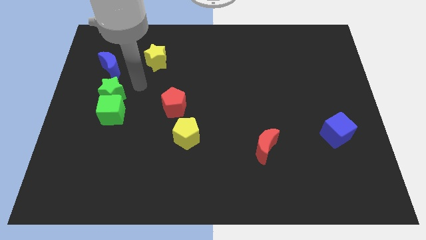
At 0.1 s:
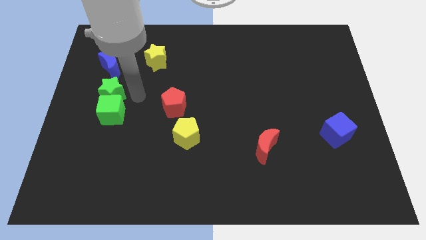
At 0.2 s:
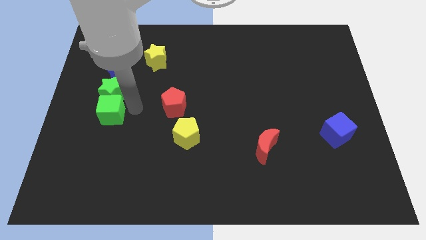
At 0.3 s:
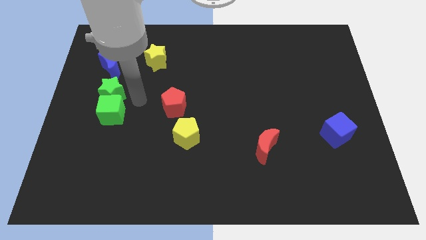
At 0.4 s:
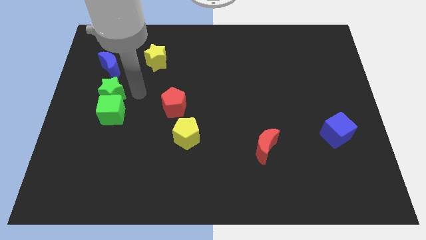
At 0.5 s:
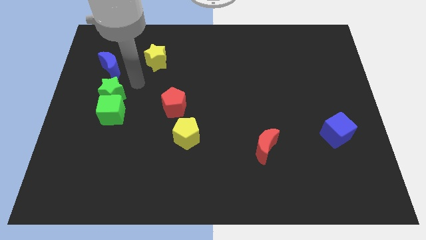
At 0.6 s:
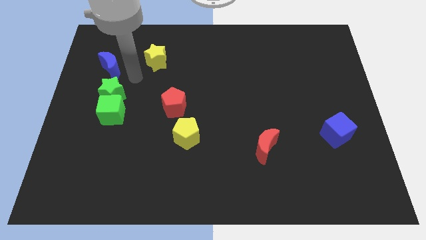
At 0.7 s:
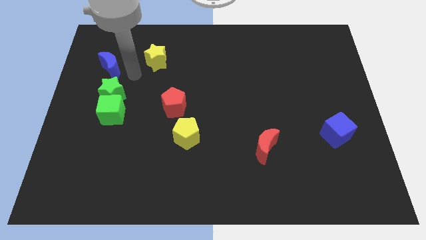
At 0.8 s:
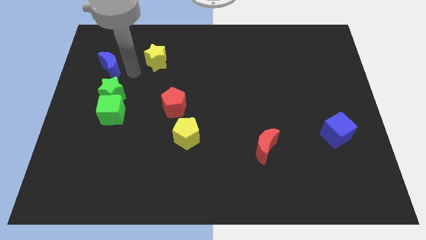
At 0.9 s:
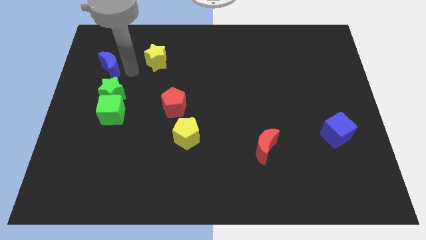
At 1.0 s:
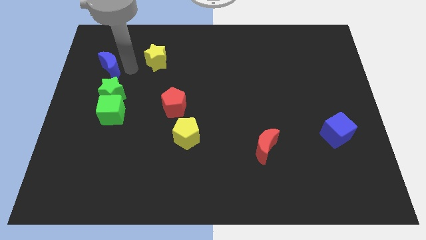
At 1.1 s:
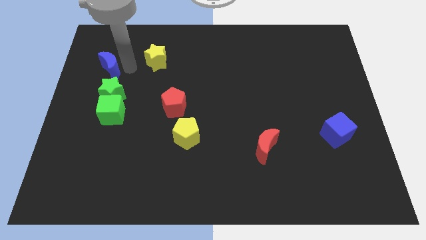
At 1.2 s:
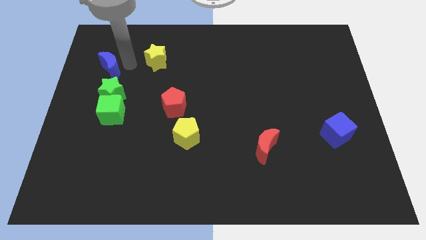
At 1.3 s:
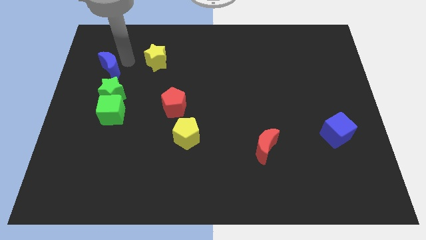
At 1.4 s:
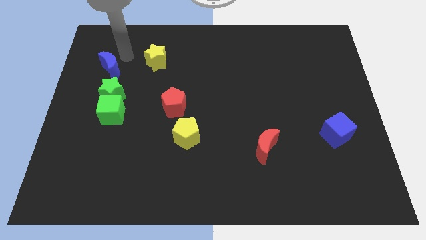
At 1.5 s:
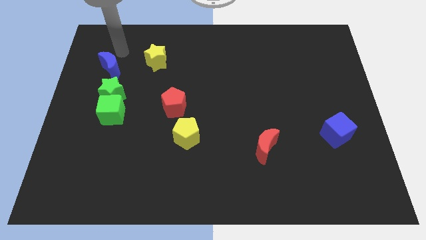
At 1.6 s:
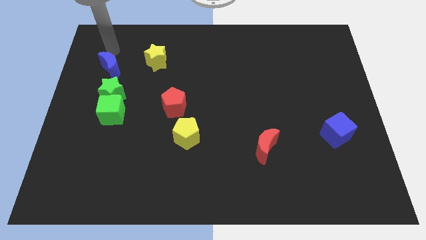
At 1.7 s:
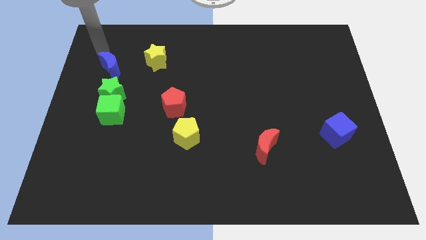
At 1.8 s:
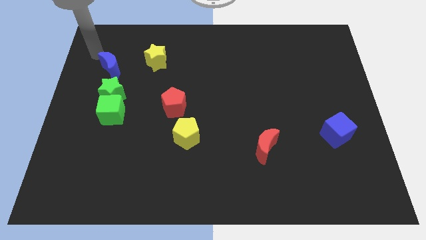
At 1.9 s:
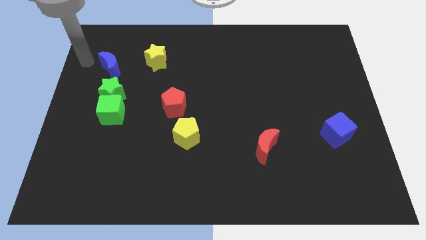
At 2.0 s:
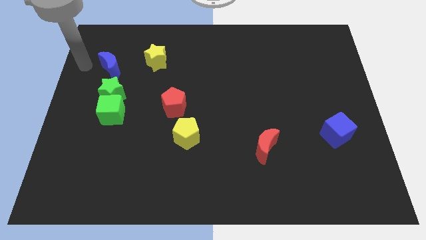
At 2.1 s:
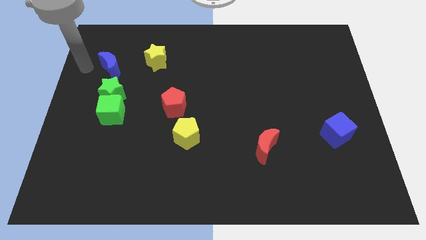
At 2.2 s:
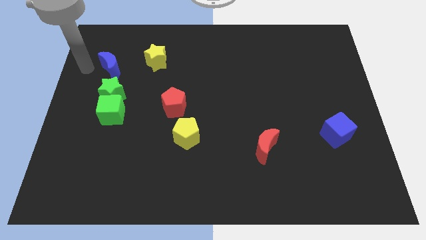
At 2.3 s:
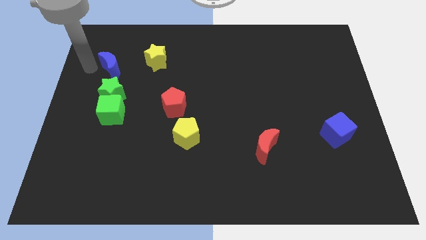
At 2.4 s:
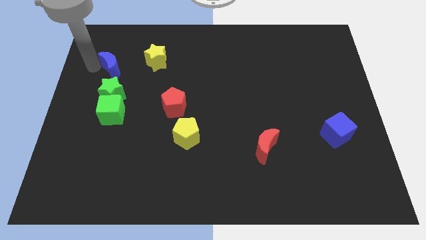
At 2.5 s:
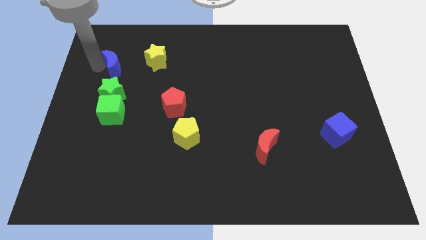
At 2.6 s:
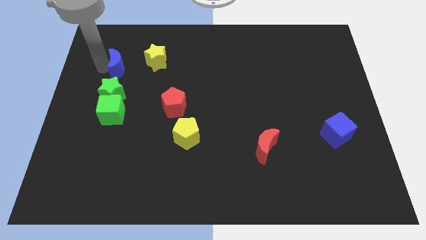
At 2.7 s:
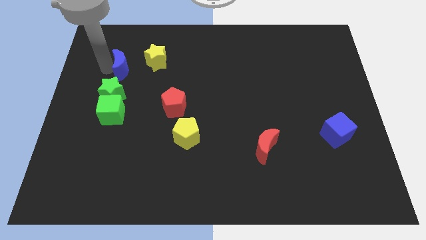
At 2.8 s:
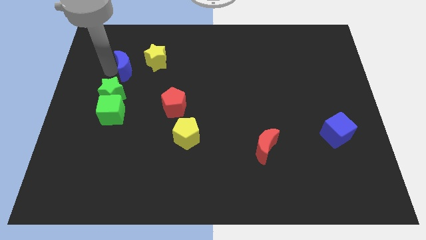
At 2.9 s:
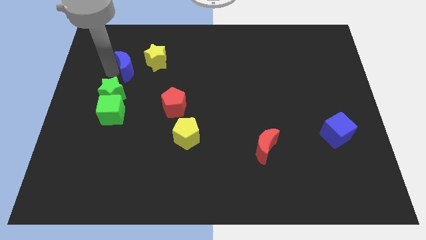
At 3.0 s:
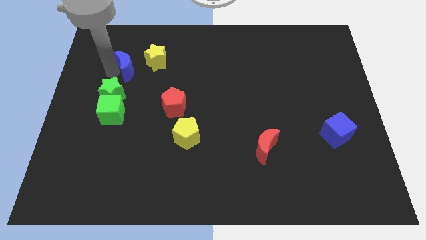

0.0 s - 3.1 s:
move the blue crescent slightly towards the left side of the yellow star

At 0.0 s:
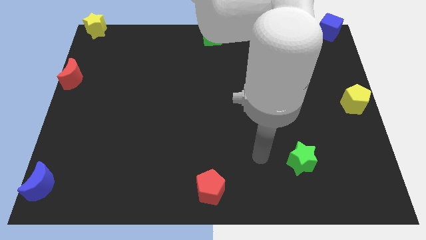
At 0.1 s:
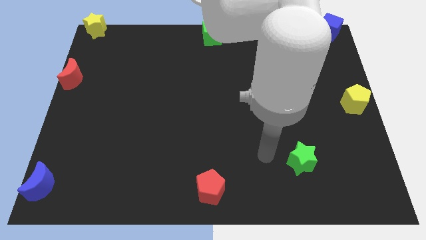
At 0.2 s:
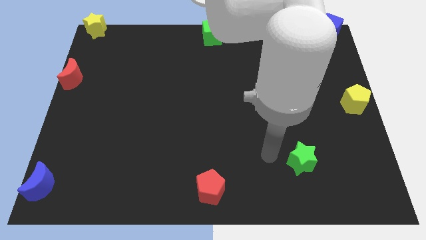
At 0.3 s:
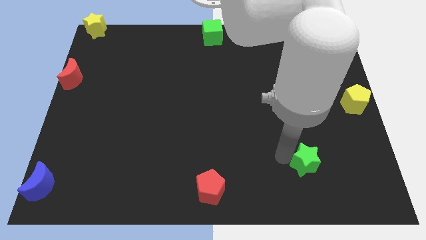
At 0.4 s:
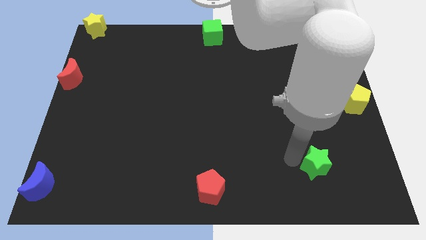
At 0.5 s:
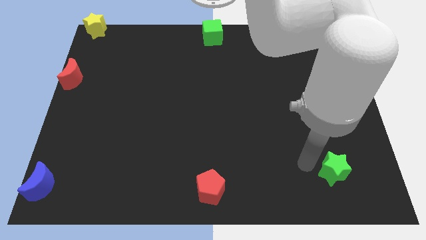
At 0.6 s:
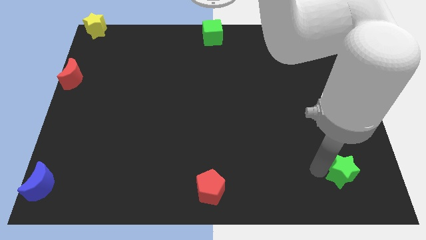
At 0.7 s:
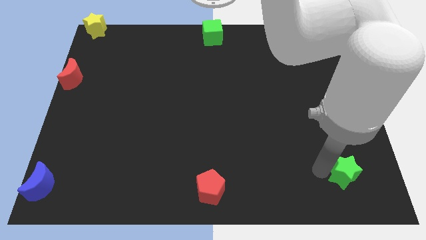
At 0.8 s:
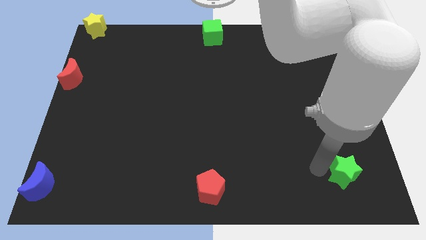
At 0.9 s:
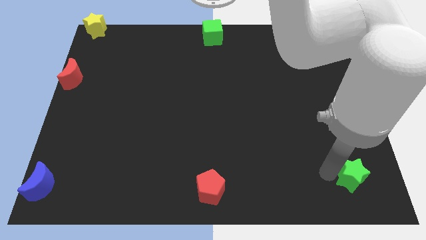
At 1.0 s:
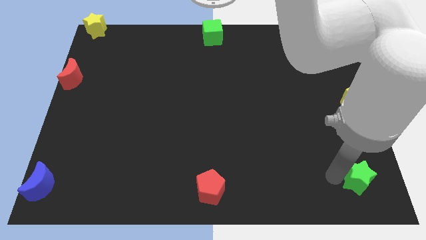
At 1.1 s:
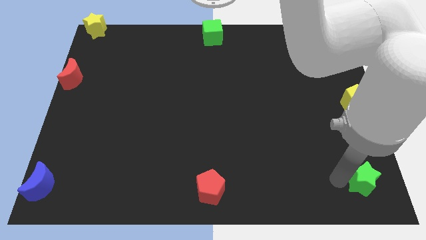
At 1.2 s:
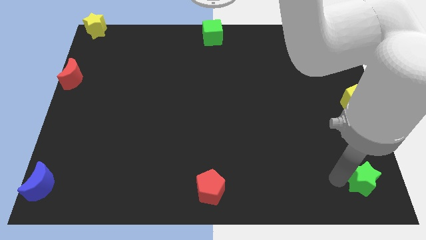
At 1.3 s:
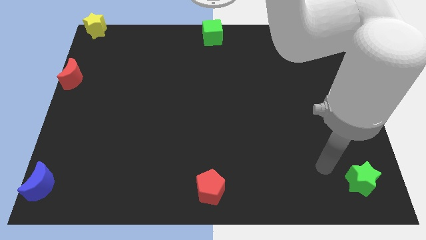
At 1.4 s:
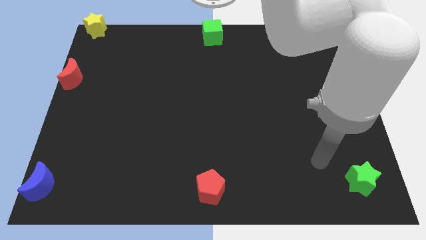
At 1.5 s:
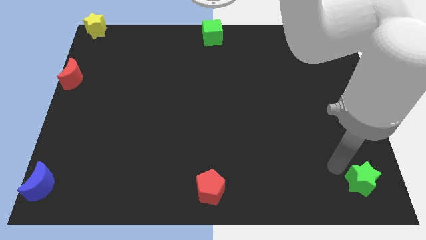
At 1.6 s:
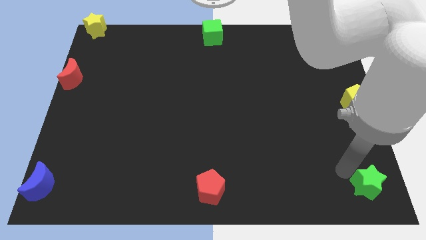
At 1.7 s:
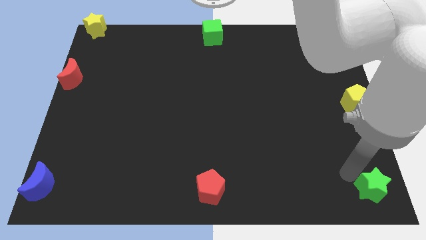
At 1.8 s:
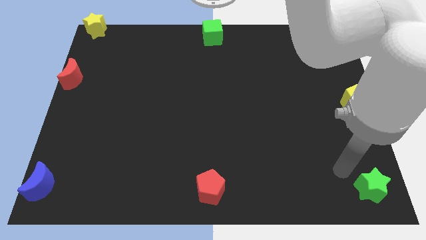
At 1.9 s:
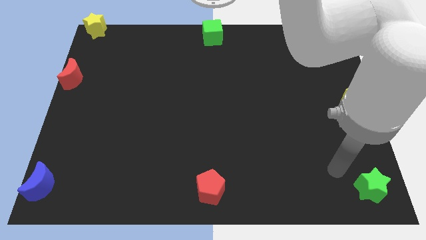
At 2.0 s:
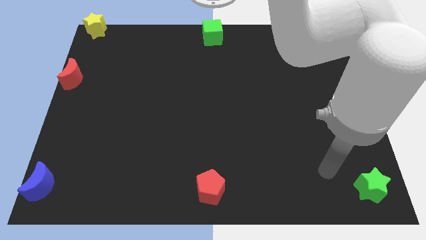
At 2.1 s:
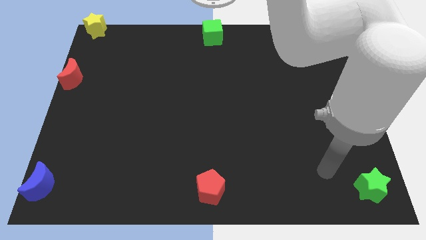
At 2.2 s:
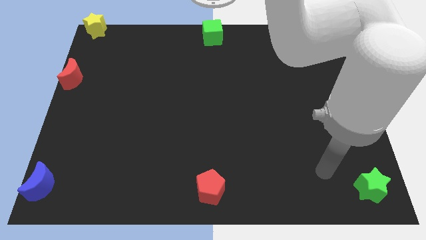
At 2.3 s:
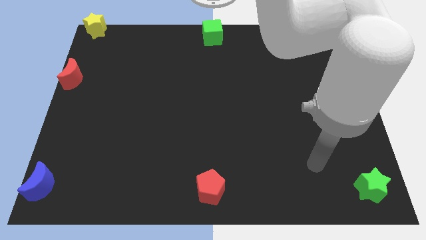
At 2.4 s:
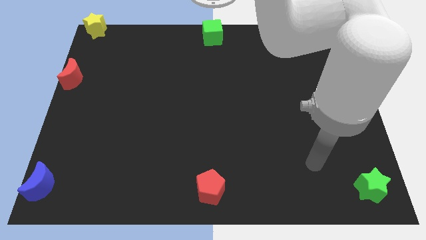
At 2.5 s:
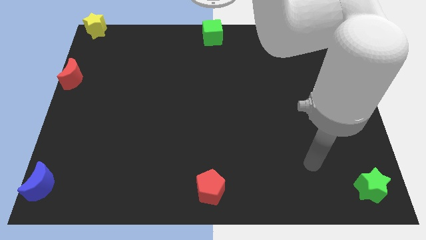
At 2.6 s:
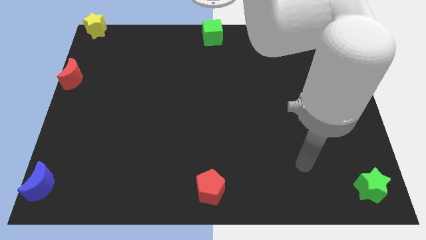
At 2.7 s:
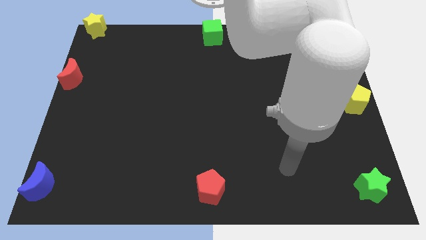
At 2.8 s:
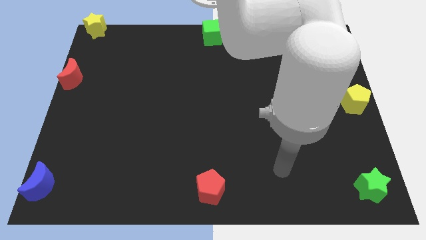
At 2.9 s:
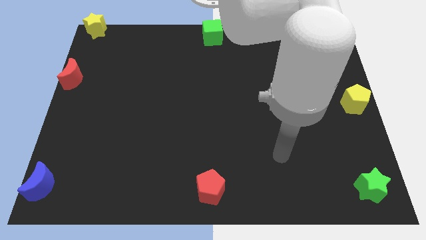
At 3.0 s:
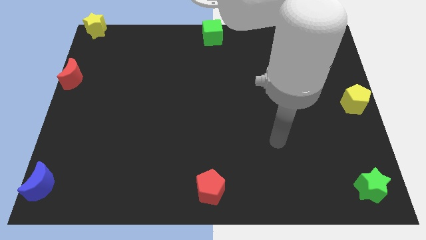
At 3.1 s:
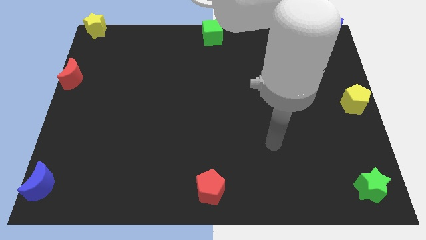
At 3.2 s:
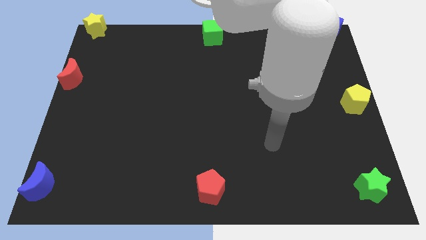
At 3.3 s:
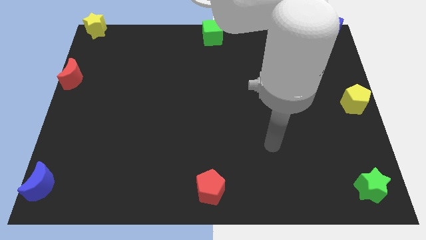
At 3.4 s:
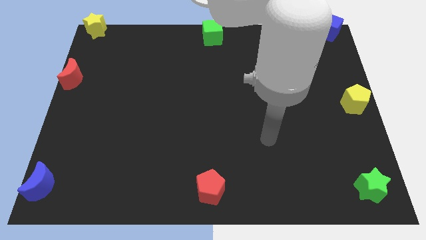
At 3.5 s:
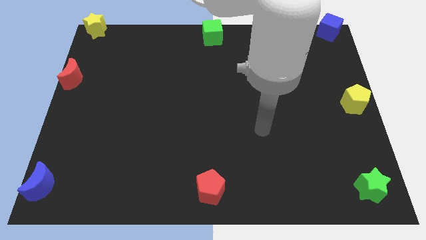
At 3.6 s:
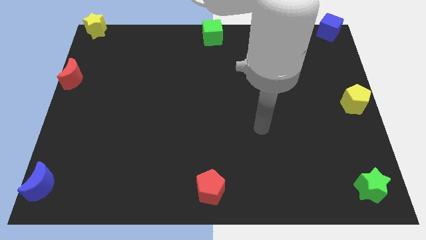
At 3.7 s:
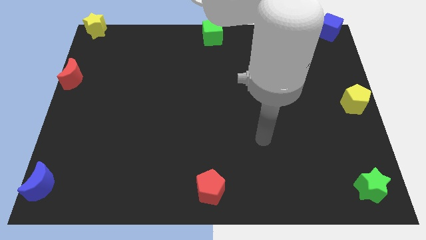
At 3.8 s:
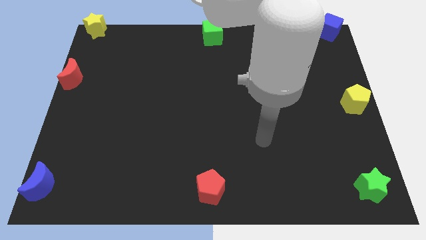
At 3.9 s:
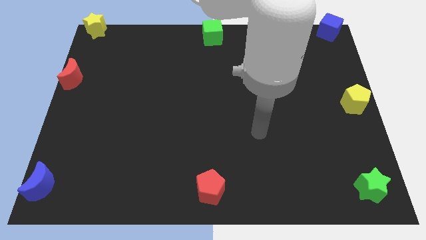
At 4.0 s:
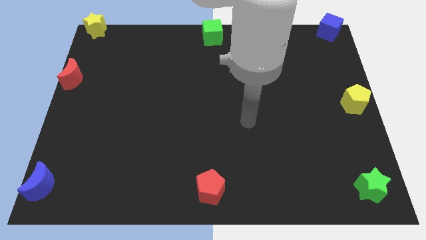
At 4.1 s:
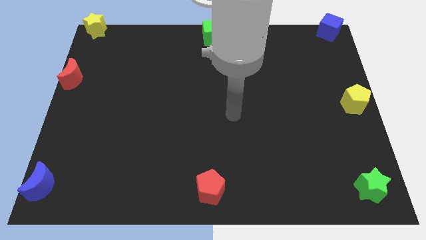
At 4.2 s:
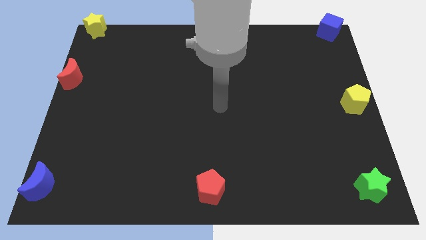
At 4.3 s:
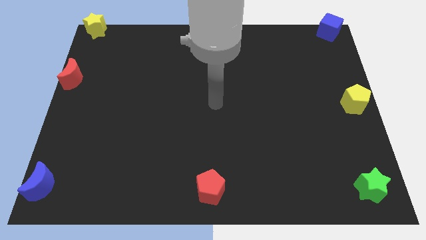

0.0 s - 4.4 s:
push the green star slightly towards the bottom right corner of the board

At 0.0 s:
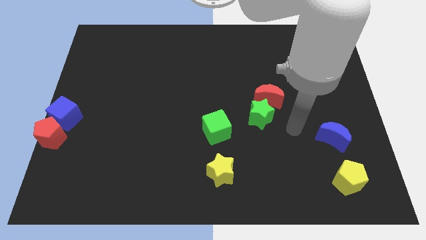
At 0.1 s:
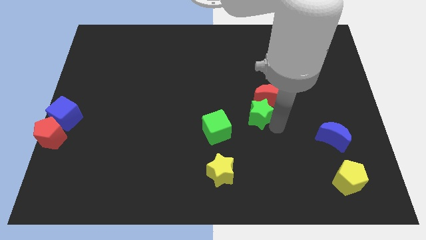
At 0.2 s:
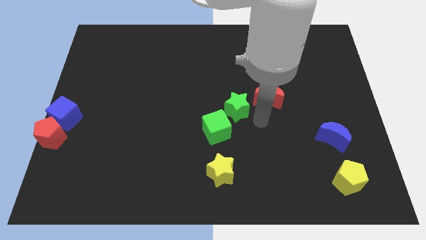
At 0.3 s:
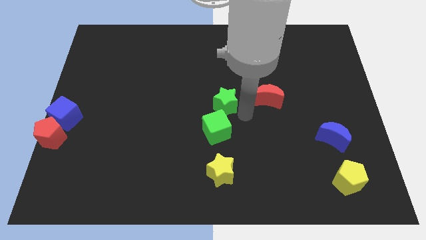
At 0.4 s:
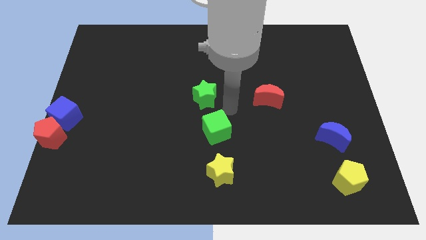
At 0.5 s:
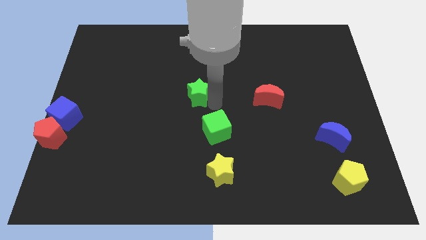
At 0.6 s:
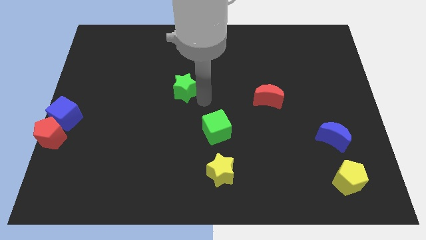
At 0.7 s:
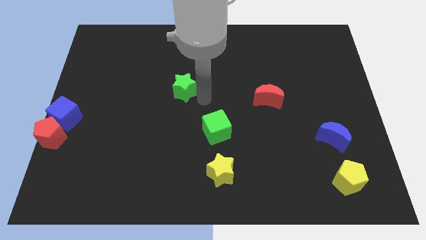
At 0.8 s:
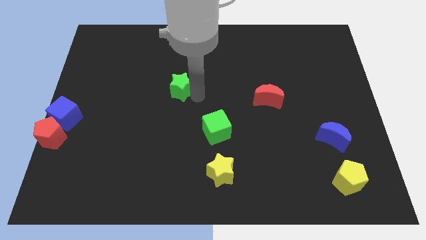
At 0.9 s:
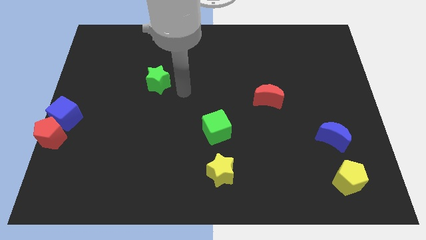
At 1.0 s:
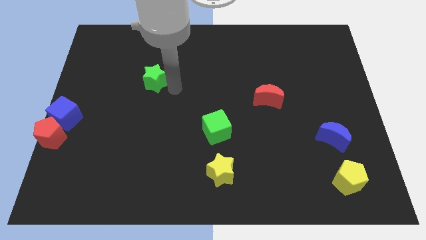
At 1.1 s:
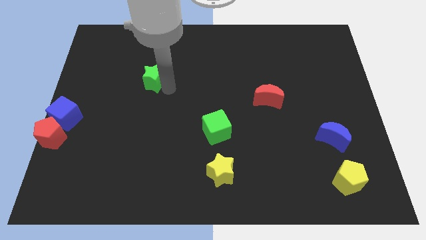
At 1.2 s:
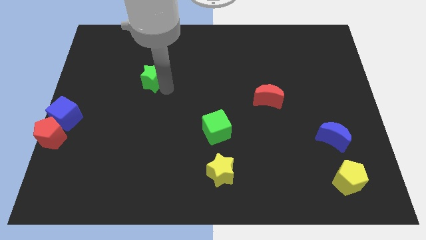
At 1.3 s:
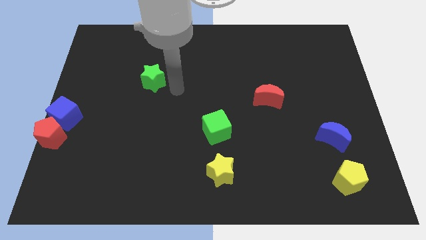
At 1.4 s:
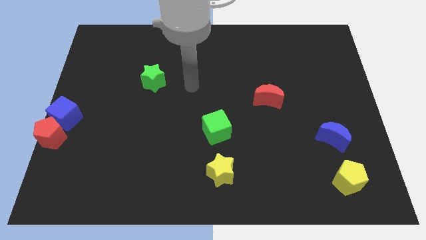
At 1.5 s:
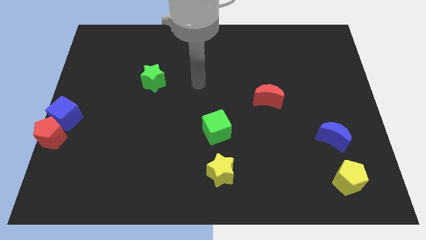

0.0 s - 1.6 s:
push the green star towards the left of the board
